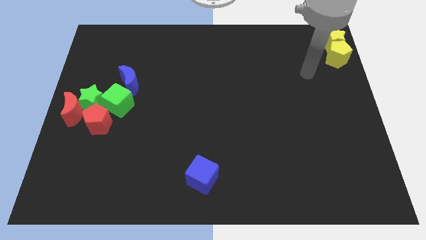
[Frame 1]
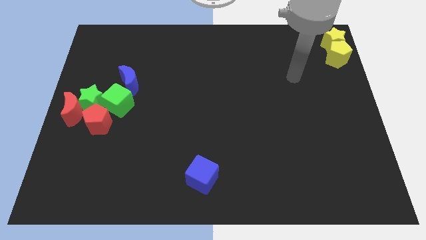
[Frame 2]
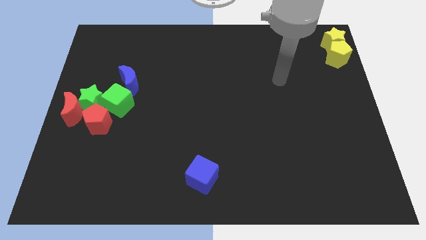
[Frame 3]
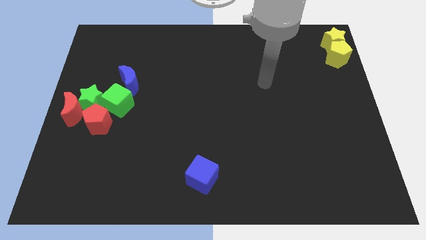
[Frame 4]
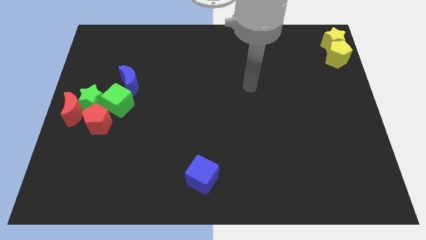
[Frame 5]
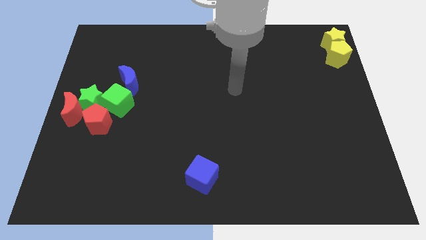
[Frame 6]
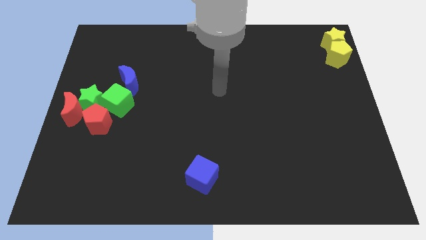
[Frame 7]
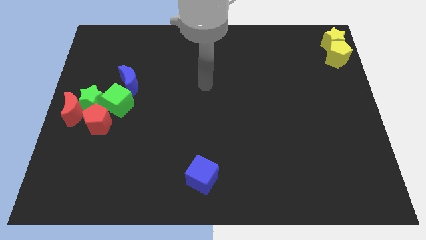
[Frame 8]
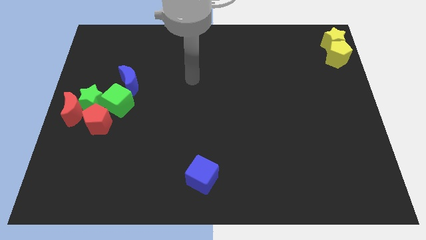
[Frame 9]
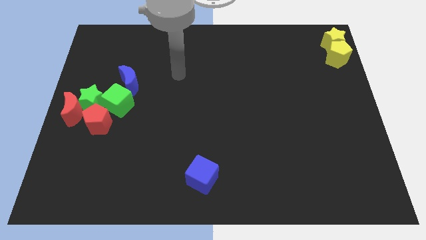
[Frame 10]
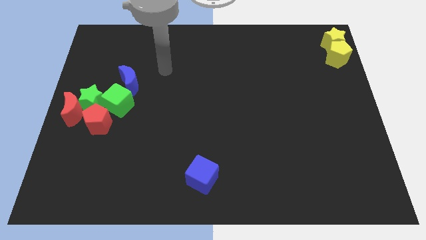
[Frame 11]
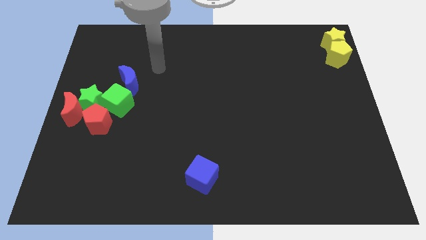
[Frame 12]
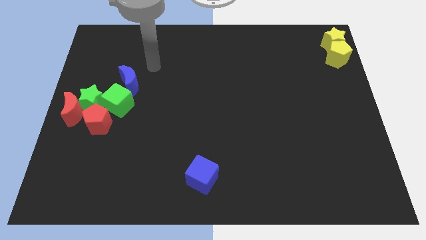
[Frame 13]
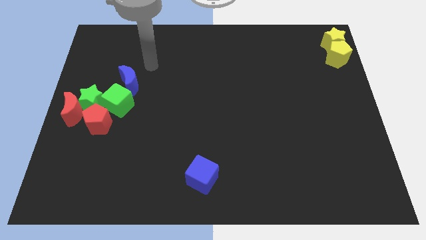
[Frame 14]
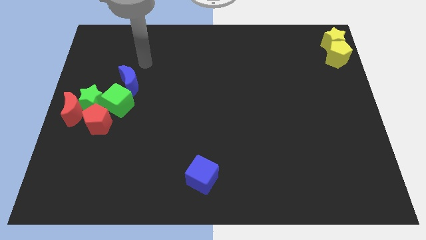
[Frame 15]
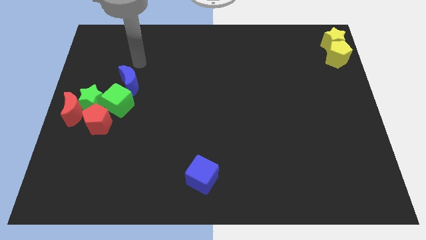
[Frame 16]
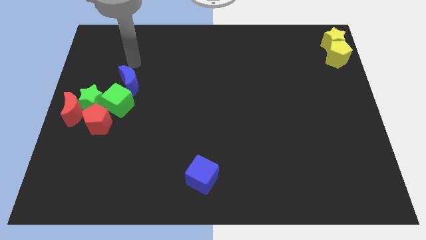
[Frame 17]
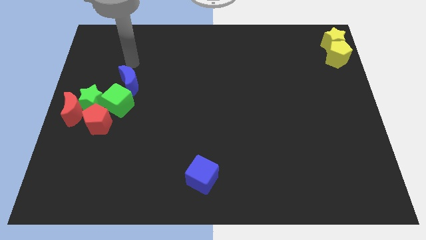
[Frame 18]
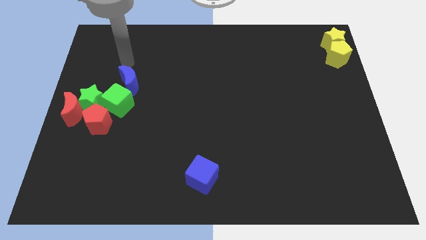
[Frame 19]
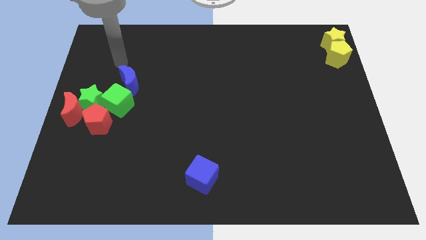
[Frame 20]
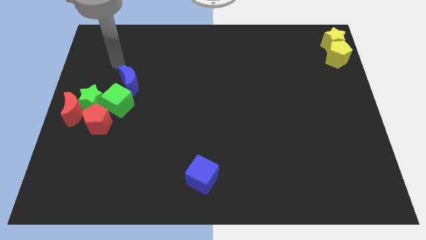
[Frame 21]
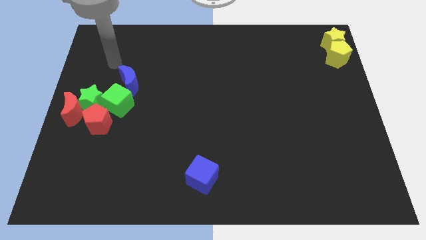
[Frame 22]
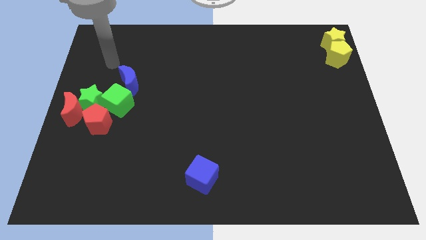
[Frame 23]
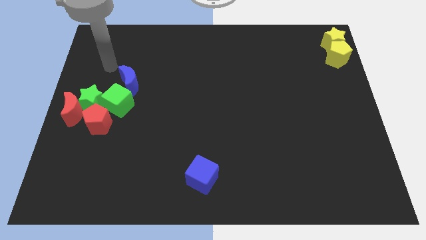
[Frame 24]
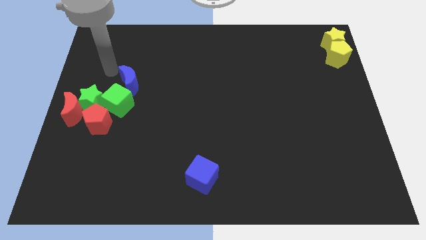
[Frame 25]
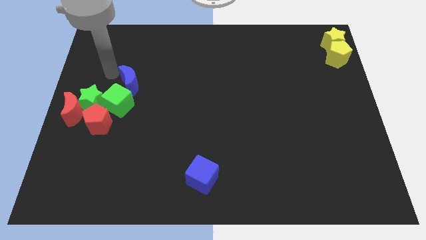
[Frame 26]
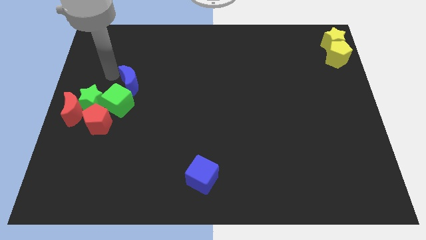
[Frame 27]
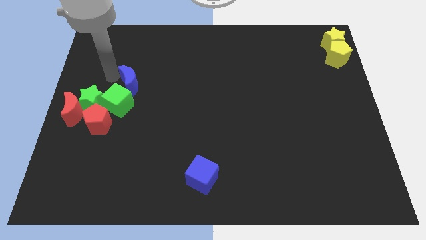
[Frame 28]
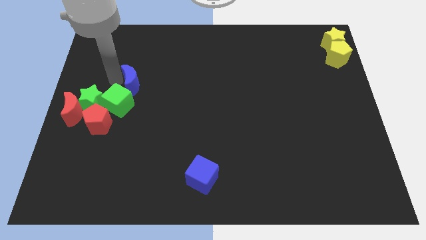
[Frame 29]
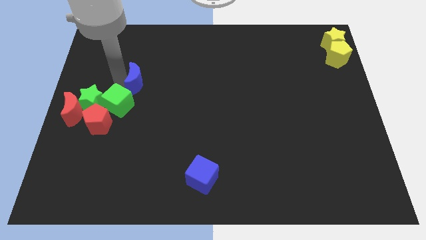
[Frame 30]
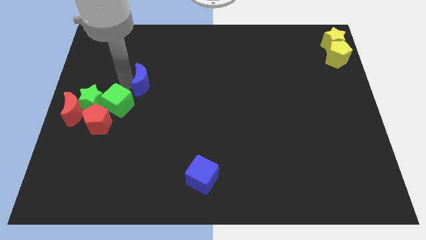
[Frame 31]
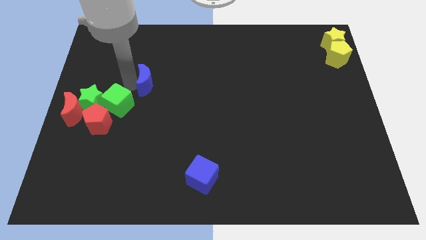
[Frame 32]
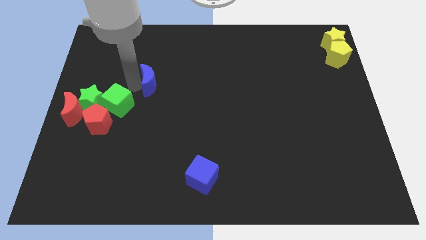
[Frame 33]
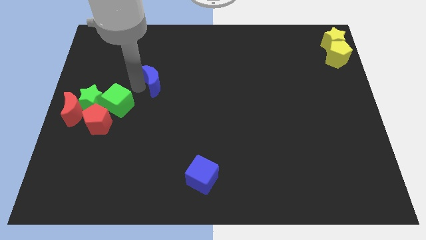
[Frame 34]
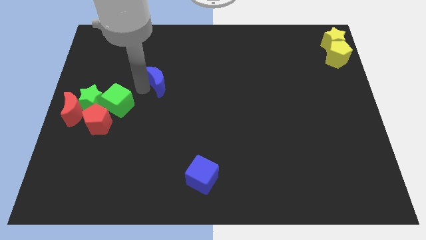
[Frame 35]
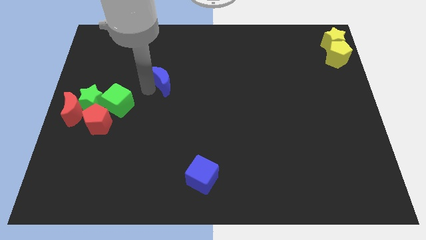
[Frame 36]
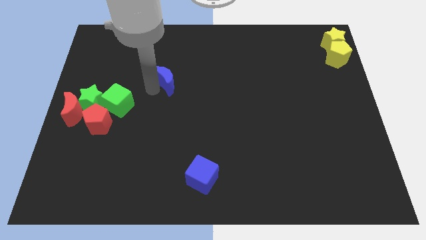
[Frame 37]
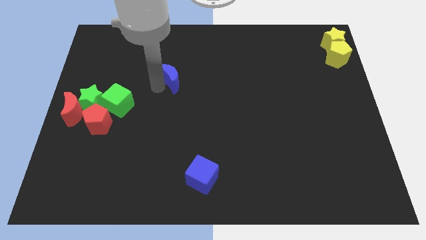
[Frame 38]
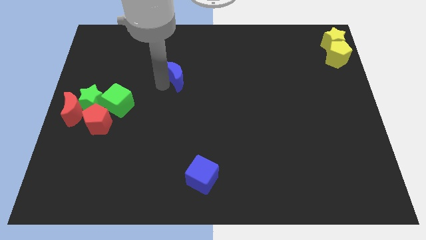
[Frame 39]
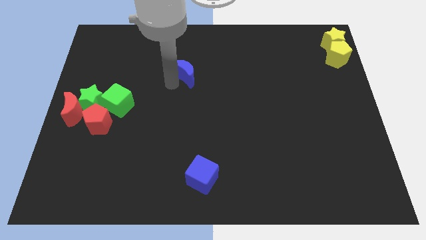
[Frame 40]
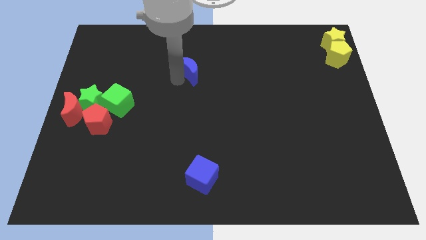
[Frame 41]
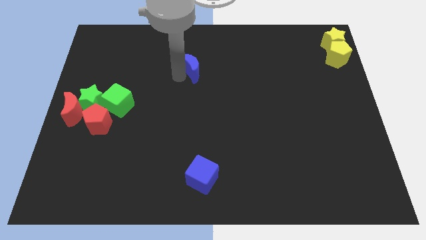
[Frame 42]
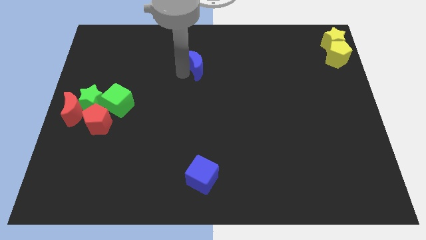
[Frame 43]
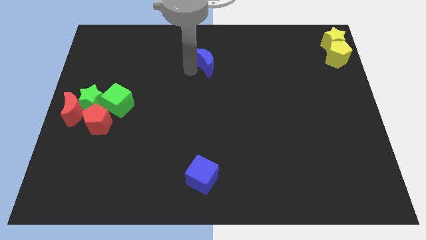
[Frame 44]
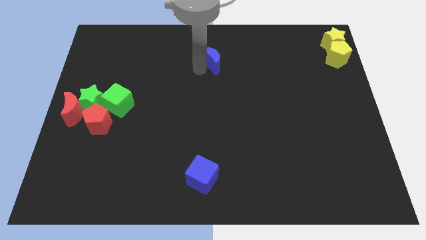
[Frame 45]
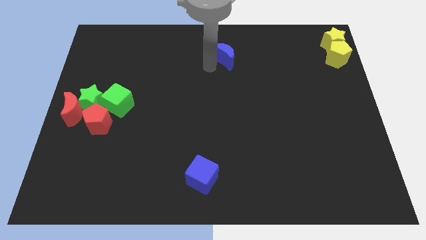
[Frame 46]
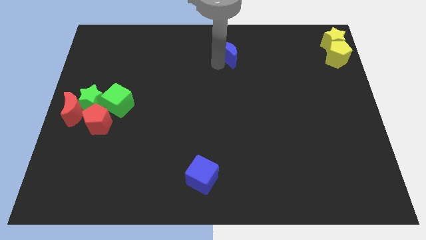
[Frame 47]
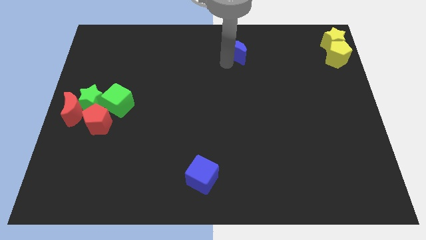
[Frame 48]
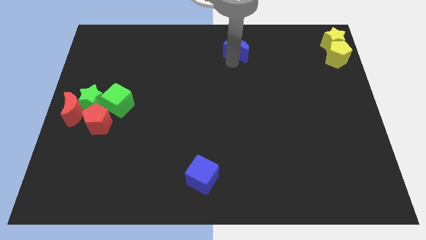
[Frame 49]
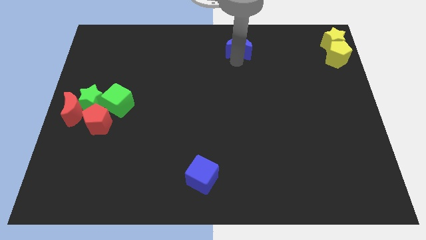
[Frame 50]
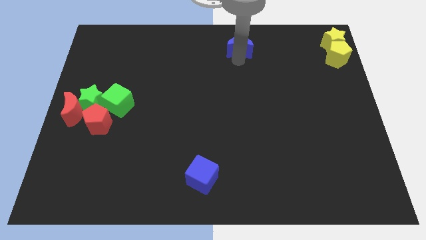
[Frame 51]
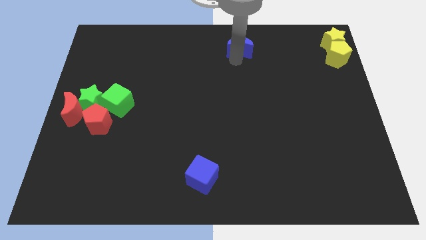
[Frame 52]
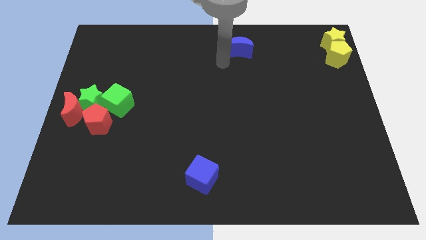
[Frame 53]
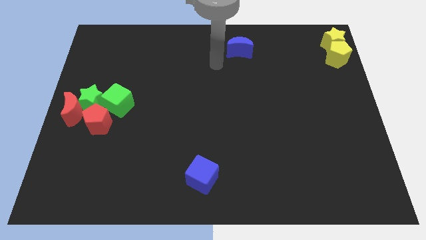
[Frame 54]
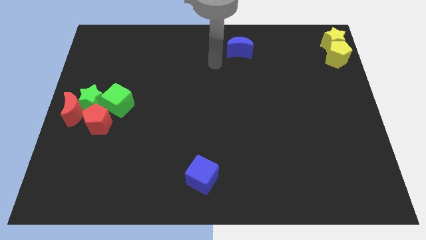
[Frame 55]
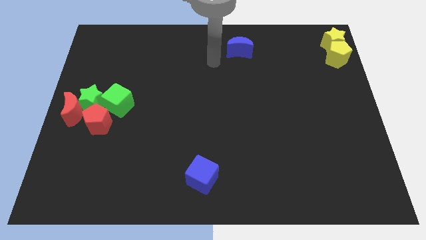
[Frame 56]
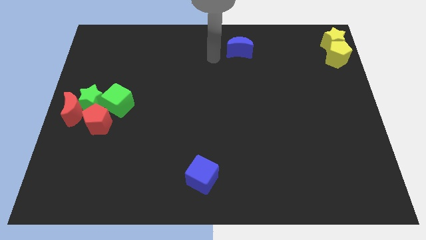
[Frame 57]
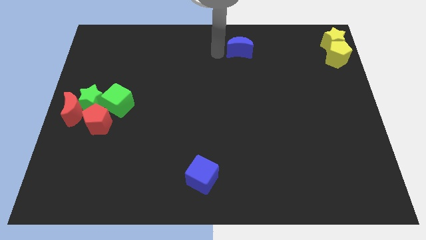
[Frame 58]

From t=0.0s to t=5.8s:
push the blue crescent to the left of the group of yellow blocks

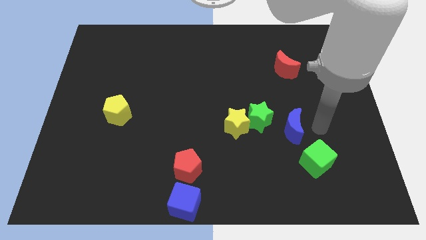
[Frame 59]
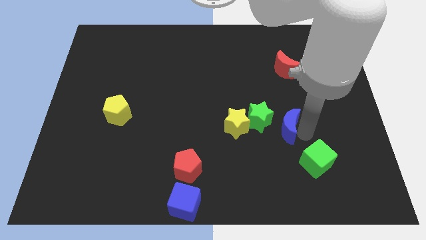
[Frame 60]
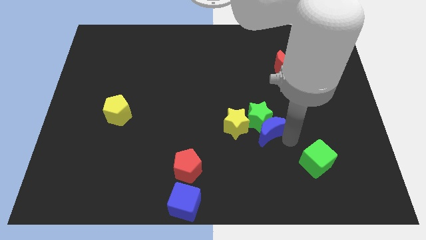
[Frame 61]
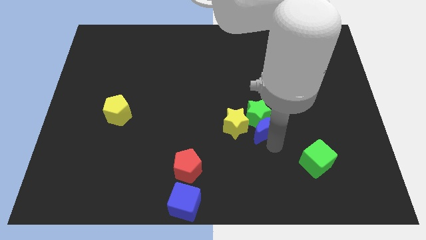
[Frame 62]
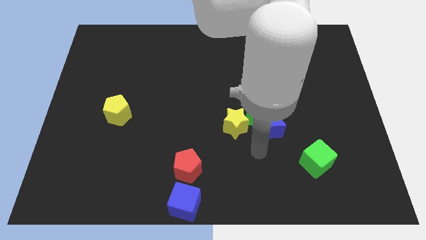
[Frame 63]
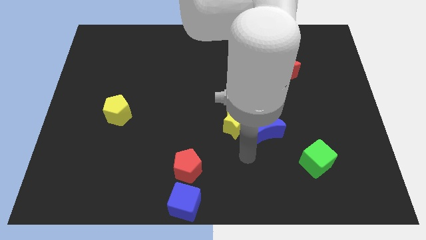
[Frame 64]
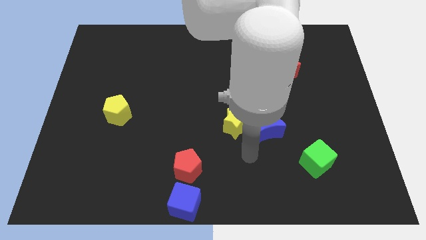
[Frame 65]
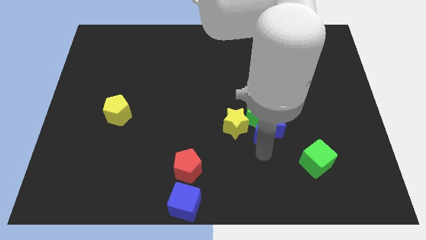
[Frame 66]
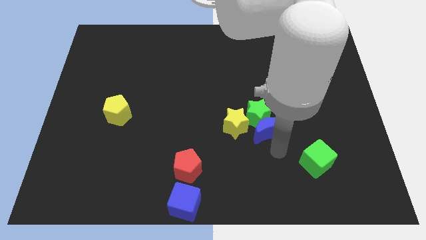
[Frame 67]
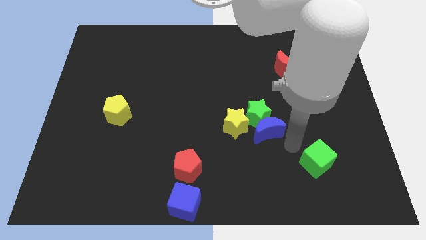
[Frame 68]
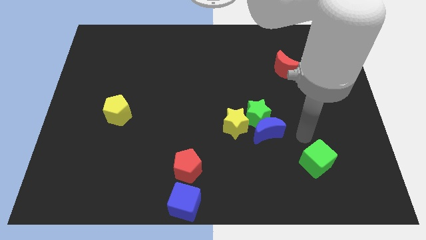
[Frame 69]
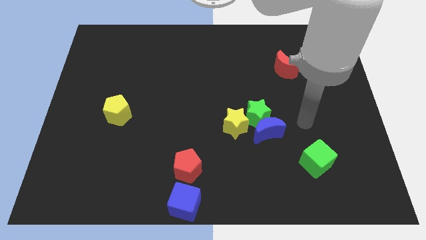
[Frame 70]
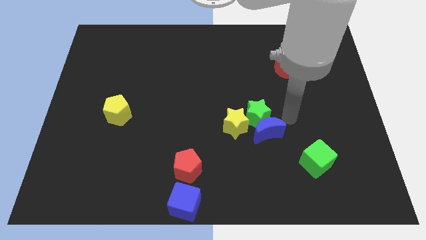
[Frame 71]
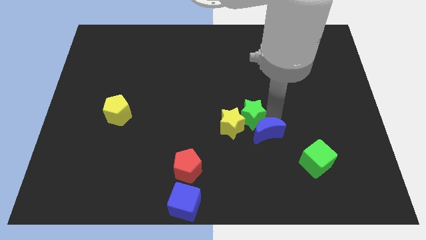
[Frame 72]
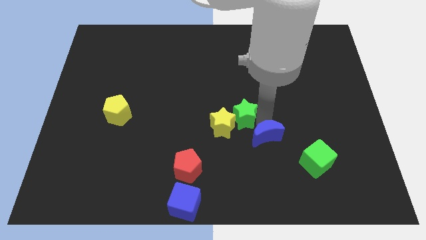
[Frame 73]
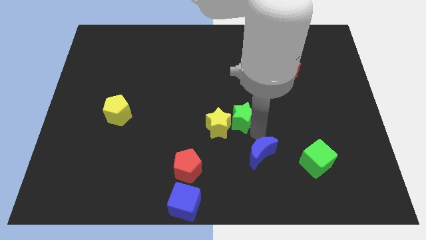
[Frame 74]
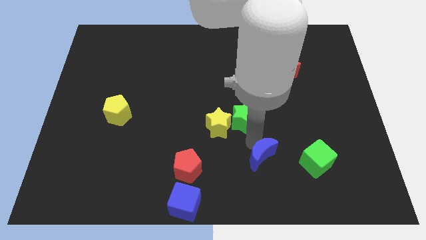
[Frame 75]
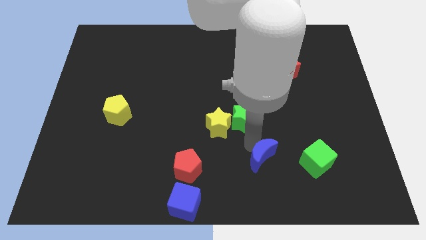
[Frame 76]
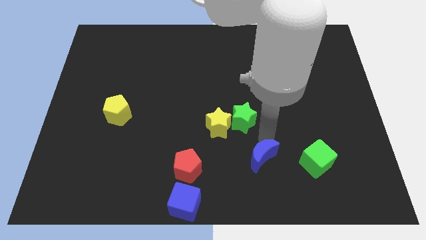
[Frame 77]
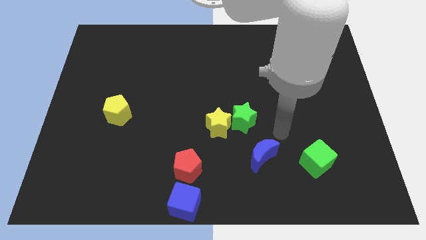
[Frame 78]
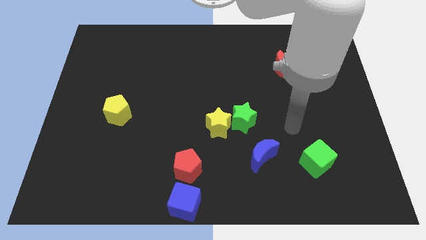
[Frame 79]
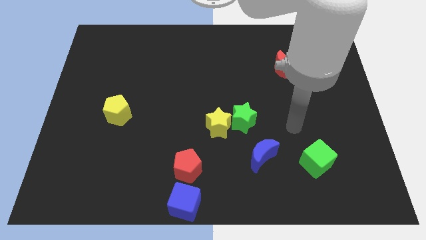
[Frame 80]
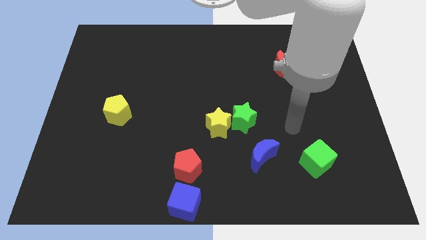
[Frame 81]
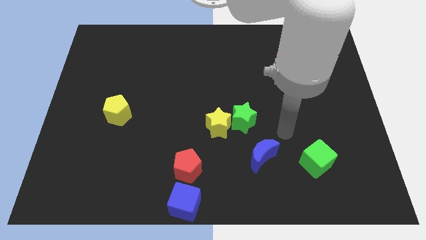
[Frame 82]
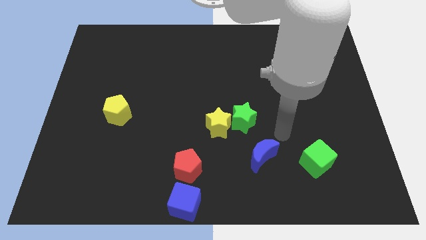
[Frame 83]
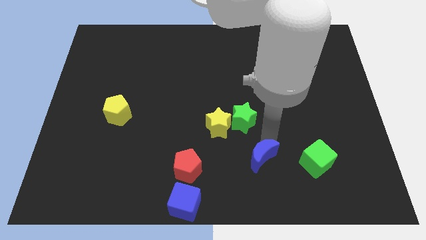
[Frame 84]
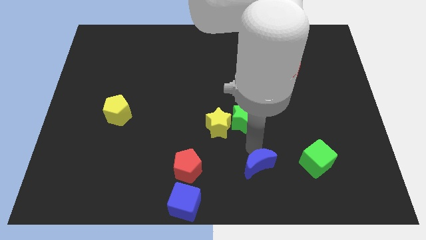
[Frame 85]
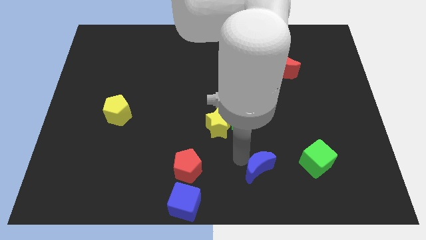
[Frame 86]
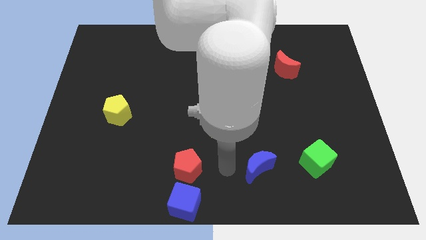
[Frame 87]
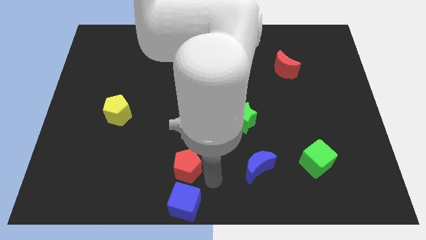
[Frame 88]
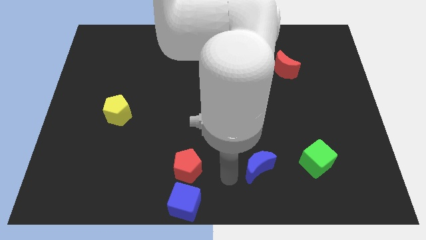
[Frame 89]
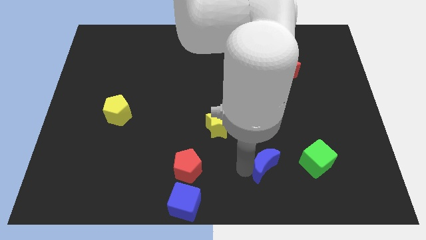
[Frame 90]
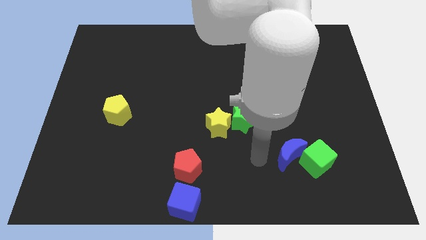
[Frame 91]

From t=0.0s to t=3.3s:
move the blue crescent slightly towards the right bottom
